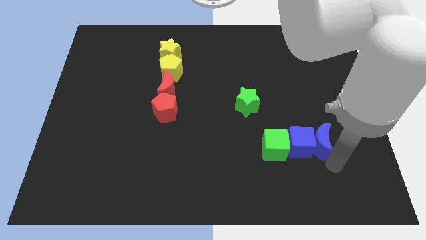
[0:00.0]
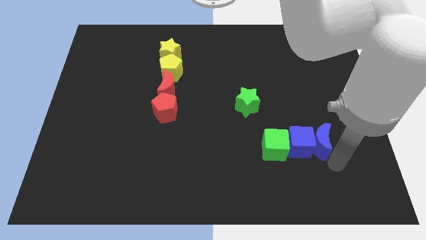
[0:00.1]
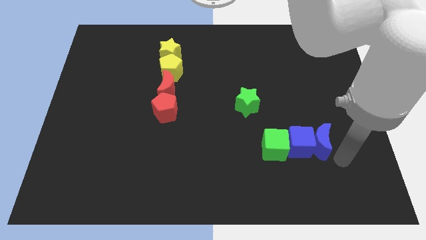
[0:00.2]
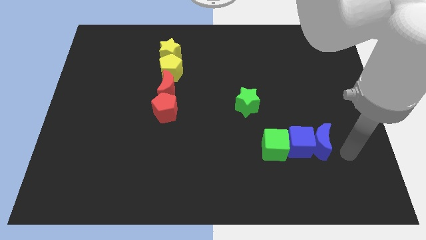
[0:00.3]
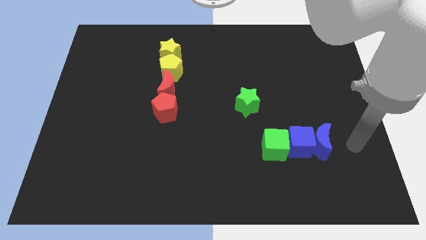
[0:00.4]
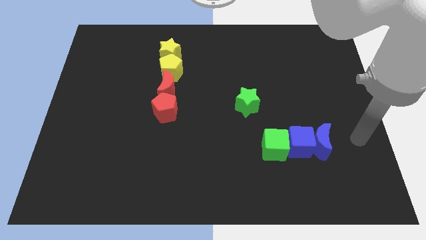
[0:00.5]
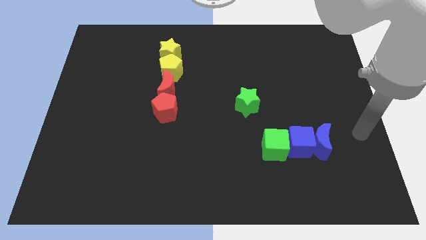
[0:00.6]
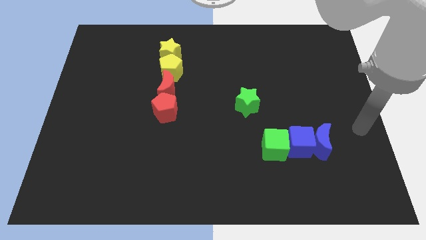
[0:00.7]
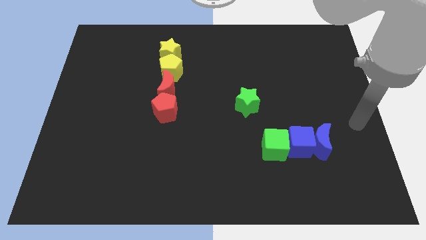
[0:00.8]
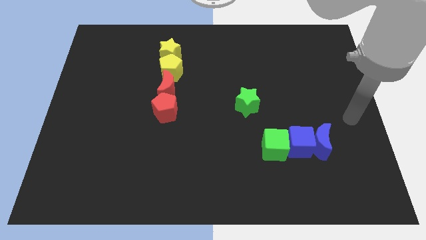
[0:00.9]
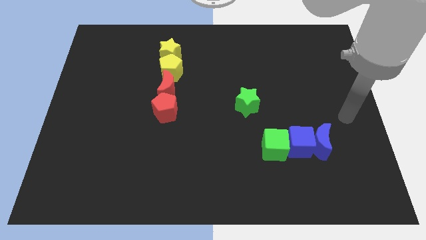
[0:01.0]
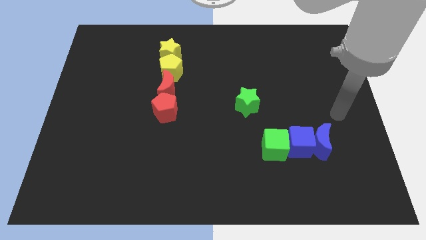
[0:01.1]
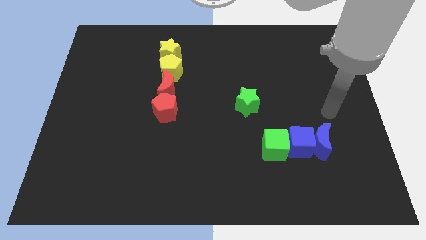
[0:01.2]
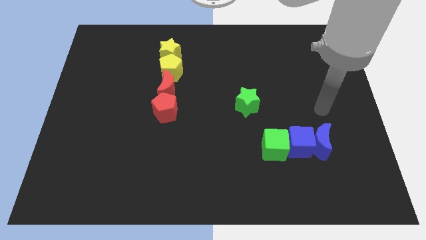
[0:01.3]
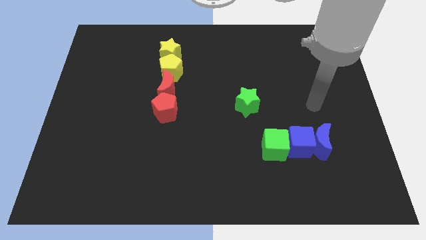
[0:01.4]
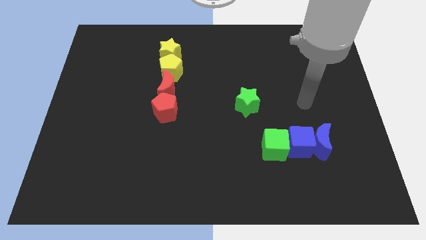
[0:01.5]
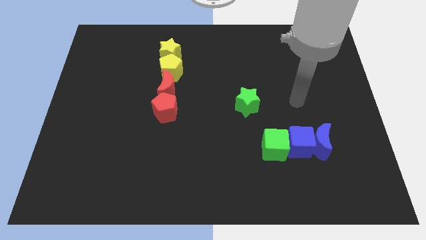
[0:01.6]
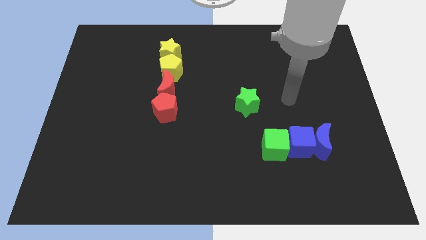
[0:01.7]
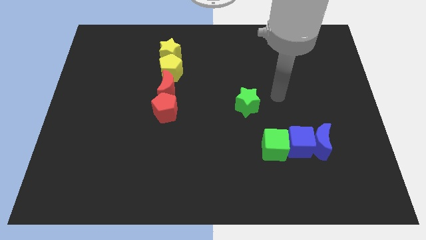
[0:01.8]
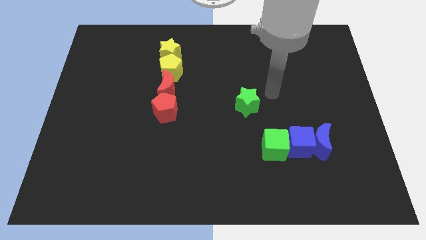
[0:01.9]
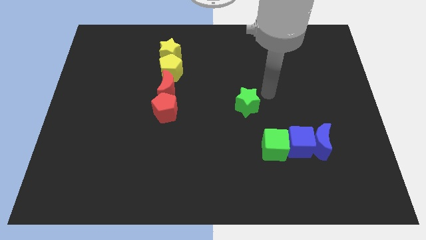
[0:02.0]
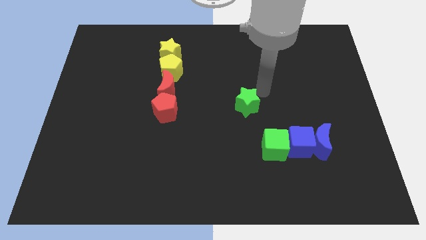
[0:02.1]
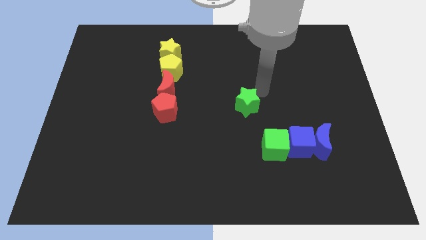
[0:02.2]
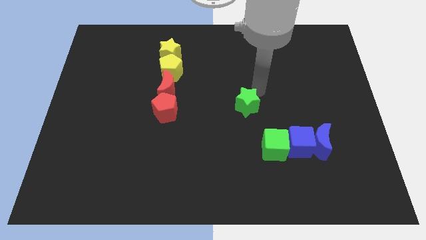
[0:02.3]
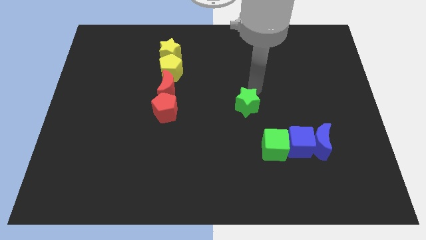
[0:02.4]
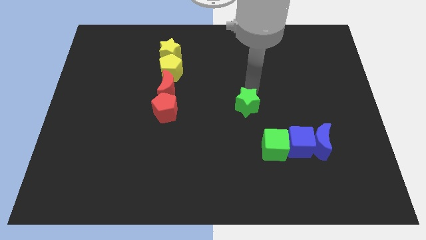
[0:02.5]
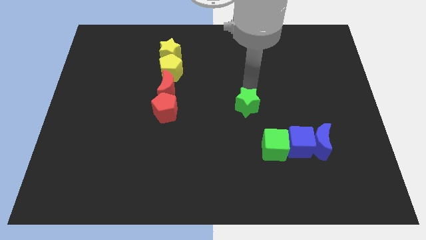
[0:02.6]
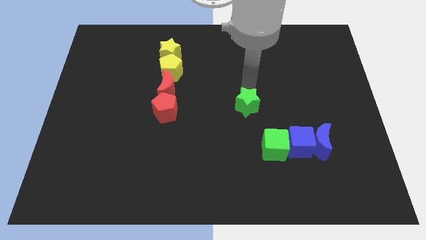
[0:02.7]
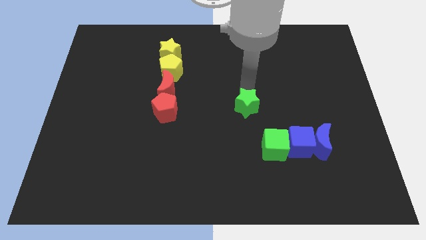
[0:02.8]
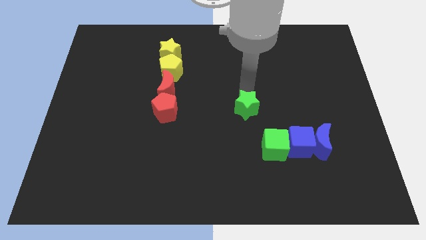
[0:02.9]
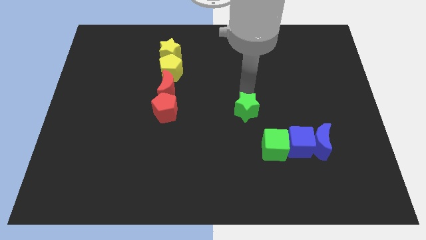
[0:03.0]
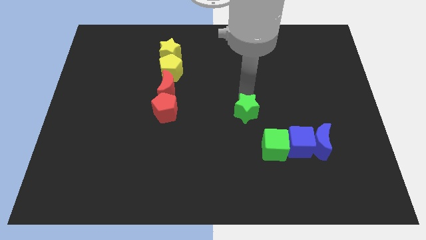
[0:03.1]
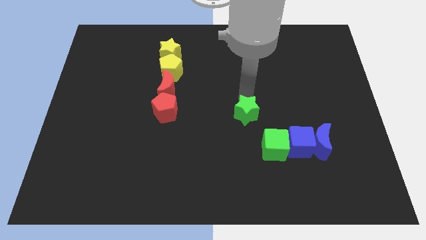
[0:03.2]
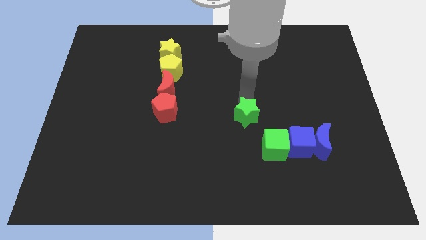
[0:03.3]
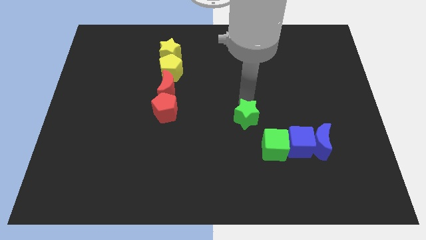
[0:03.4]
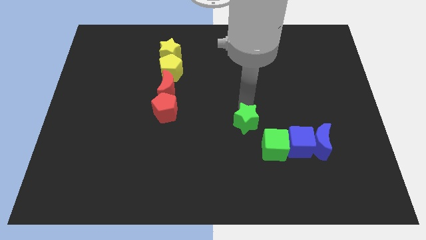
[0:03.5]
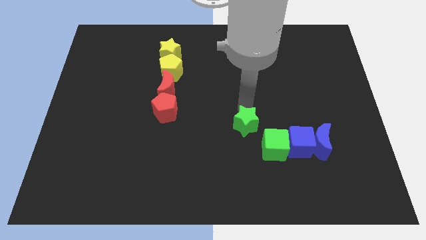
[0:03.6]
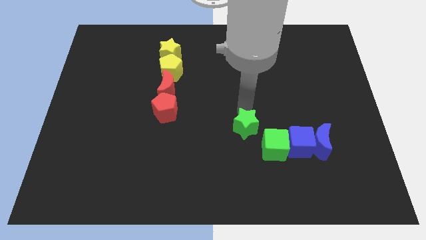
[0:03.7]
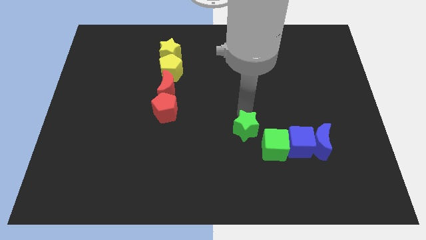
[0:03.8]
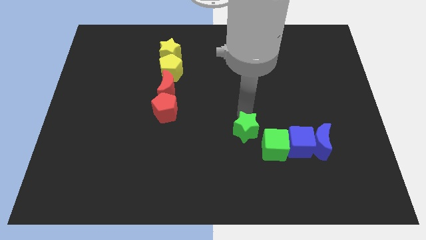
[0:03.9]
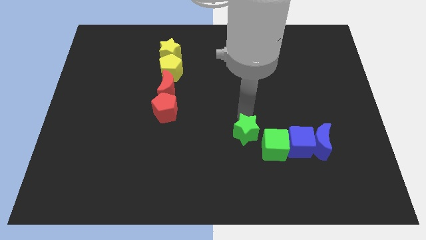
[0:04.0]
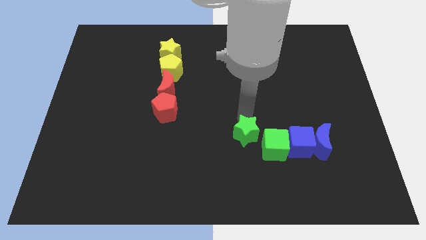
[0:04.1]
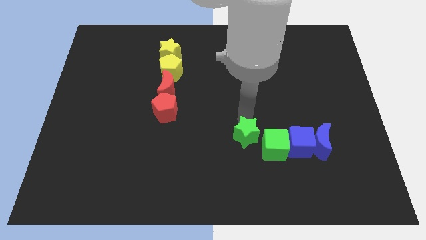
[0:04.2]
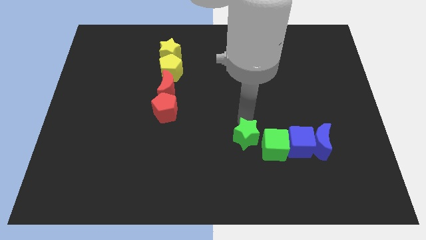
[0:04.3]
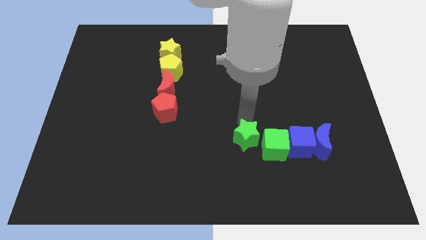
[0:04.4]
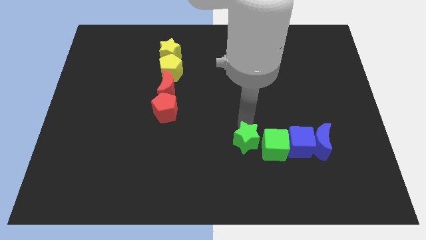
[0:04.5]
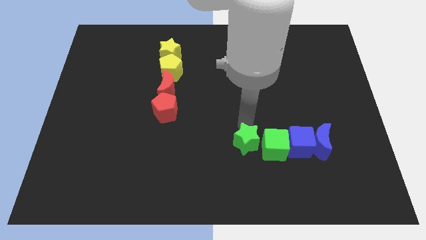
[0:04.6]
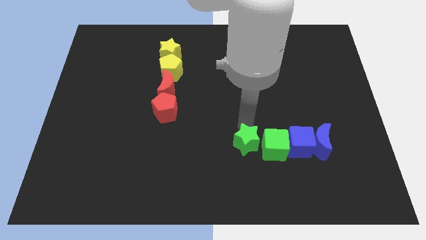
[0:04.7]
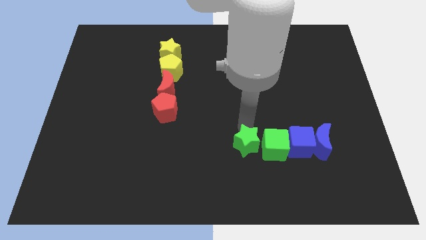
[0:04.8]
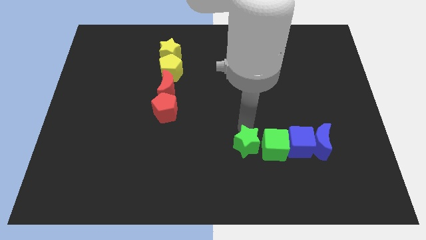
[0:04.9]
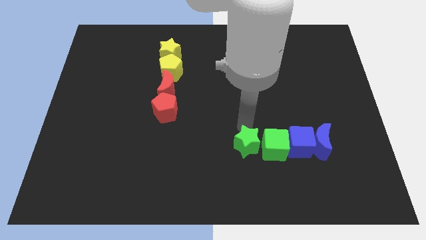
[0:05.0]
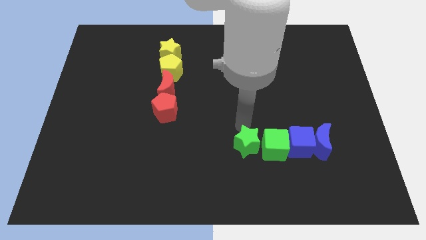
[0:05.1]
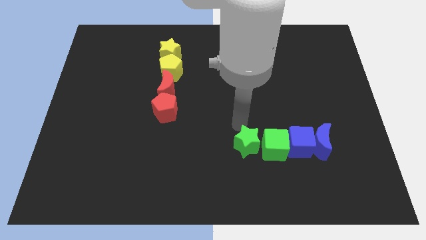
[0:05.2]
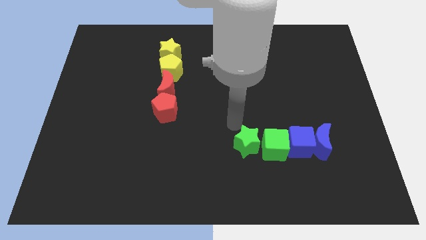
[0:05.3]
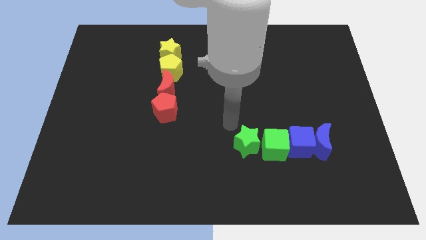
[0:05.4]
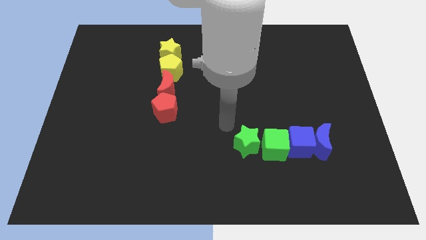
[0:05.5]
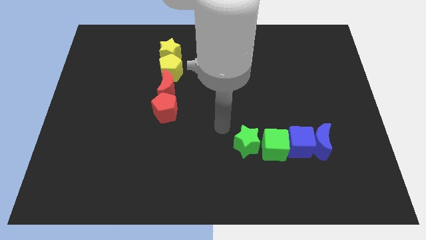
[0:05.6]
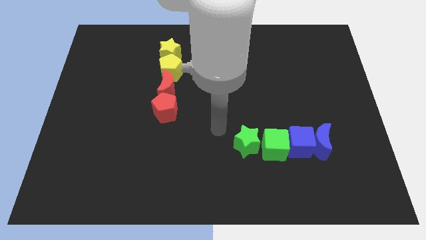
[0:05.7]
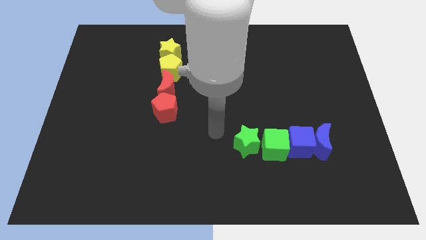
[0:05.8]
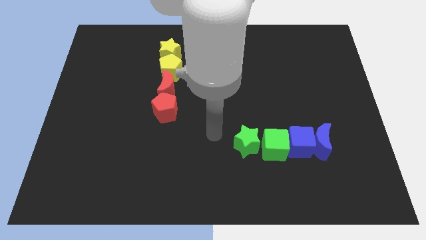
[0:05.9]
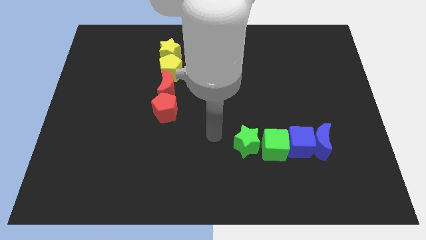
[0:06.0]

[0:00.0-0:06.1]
move green star to the left side of the green cube

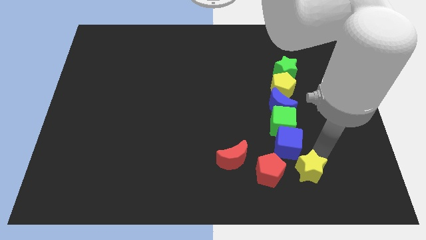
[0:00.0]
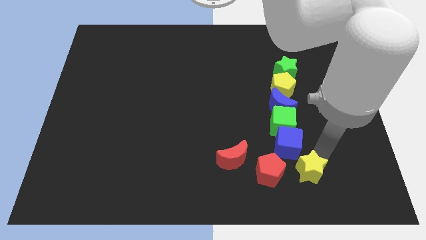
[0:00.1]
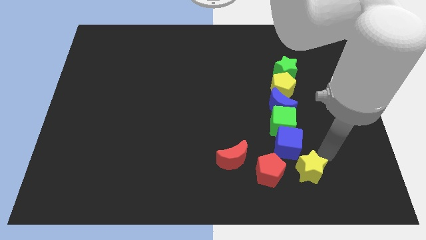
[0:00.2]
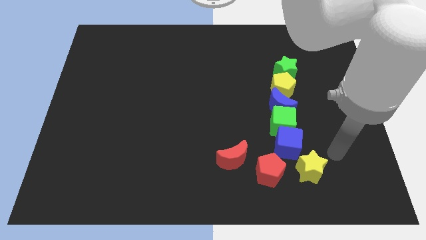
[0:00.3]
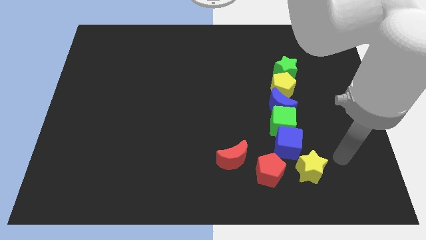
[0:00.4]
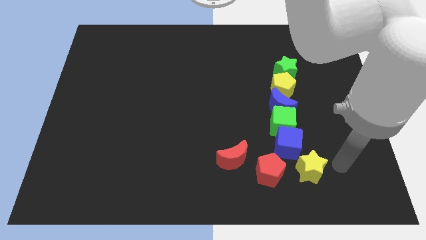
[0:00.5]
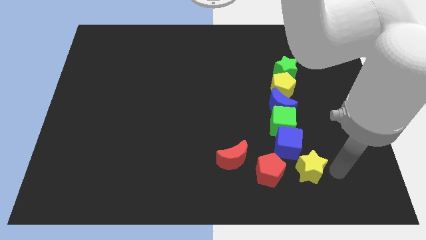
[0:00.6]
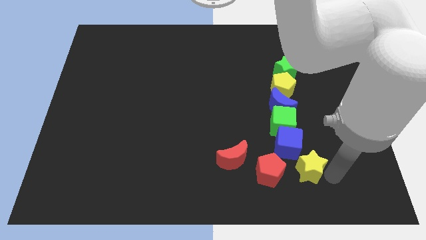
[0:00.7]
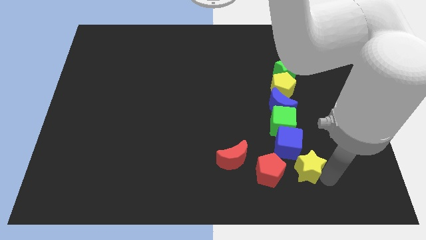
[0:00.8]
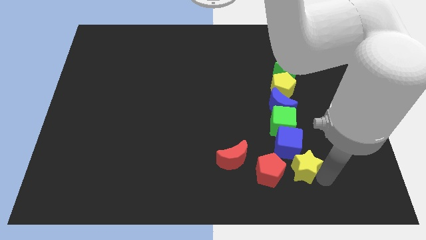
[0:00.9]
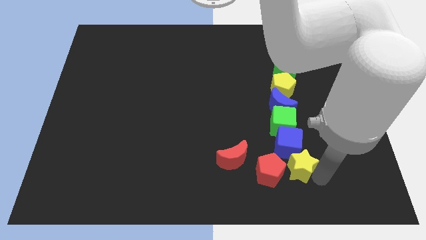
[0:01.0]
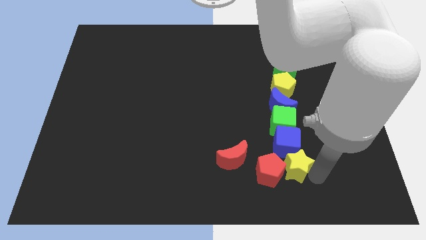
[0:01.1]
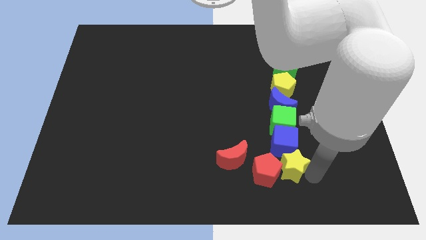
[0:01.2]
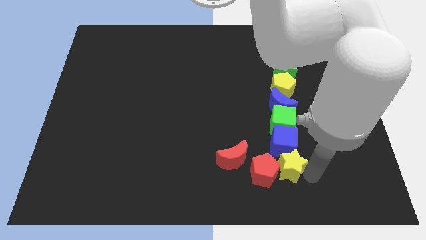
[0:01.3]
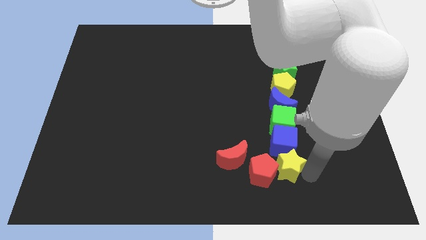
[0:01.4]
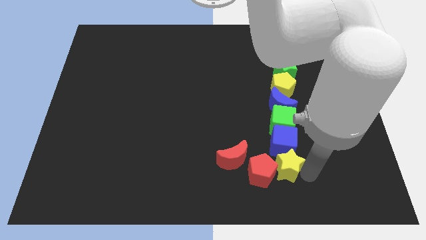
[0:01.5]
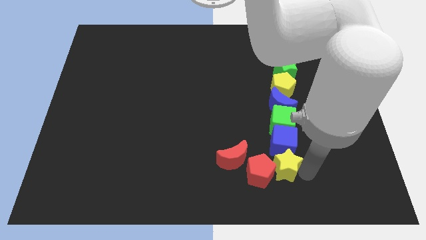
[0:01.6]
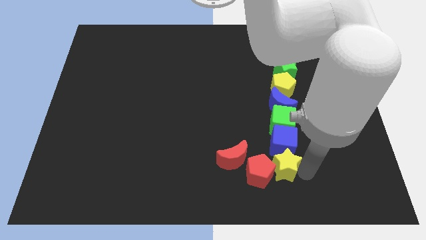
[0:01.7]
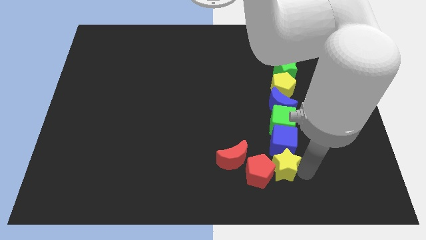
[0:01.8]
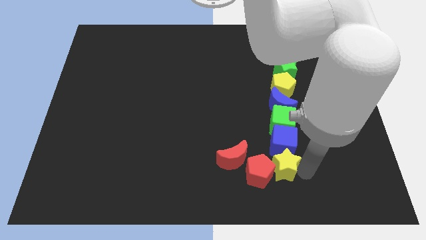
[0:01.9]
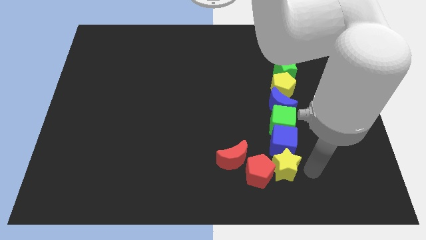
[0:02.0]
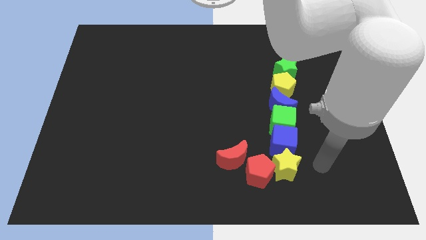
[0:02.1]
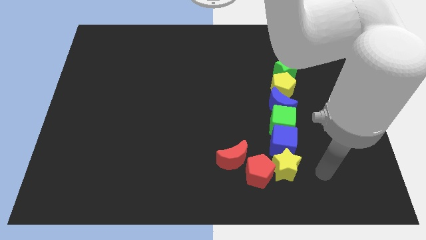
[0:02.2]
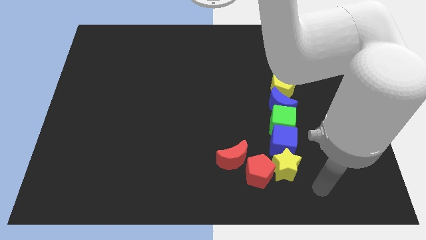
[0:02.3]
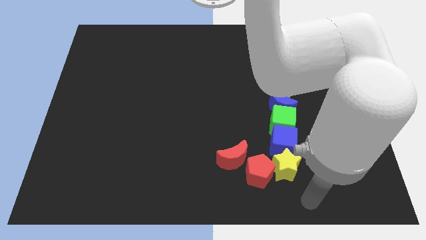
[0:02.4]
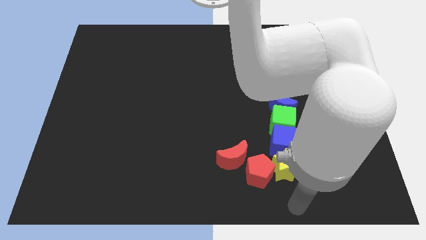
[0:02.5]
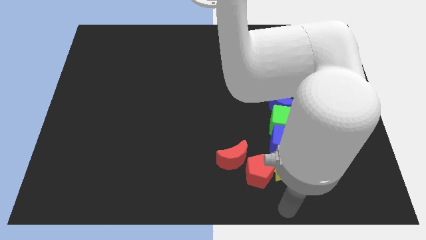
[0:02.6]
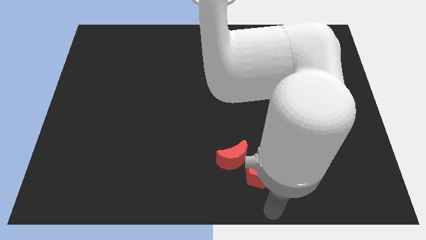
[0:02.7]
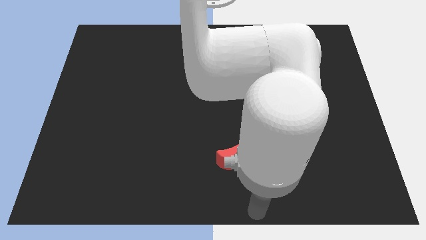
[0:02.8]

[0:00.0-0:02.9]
move the yellow star into the red pentagon
